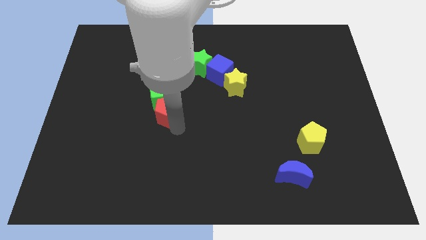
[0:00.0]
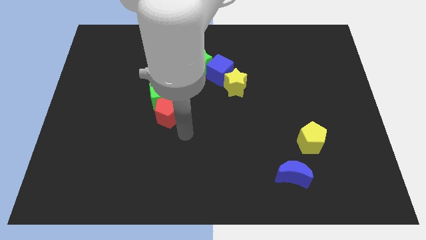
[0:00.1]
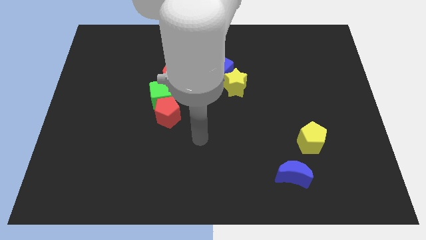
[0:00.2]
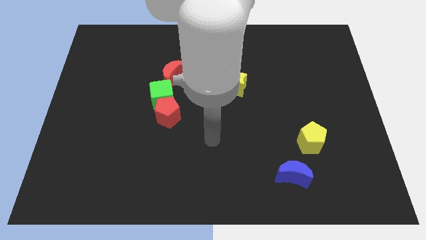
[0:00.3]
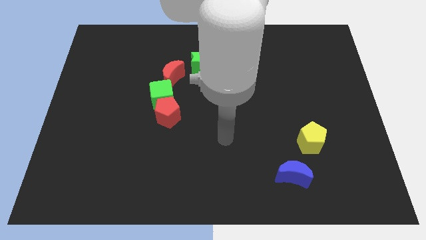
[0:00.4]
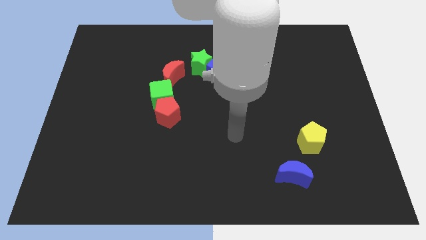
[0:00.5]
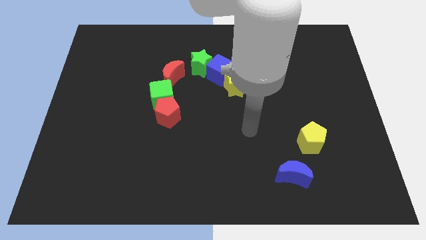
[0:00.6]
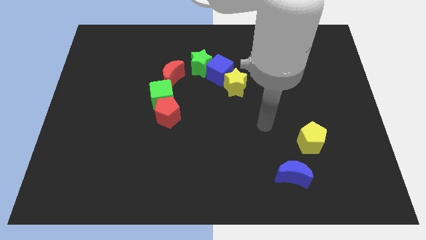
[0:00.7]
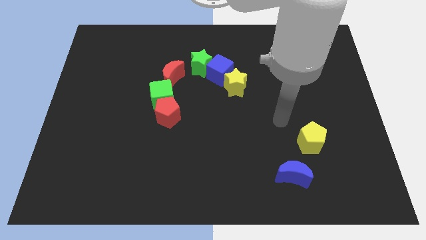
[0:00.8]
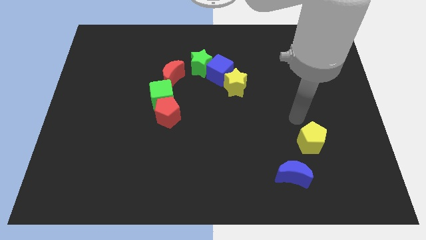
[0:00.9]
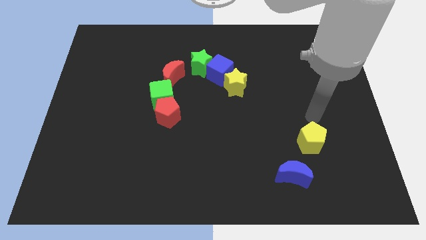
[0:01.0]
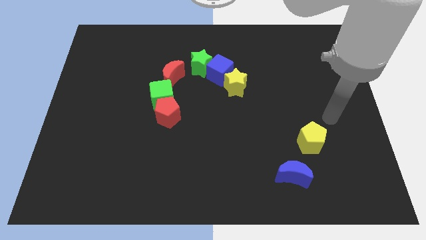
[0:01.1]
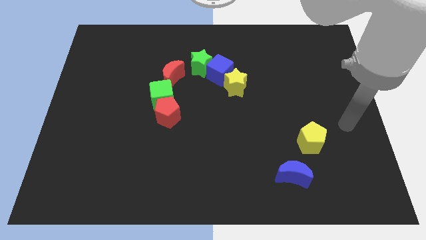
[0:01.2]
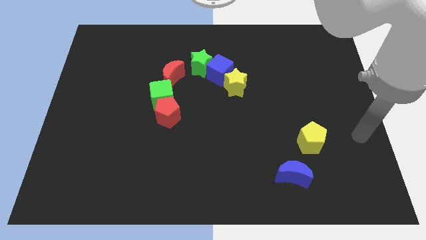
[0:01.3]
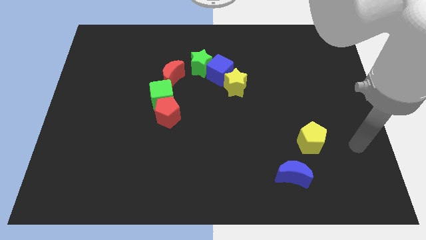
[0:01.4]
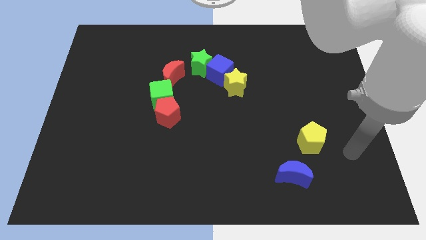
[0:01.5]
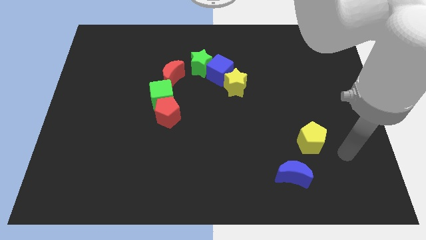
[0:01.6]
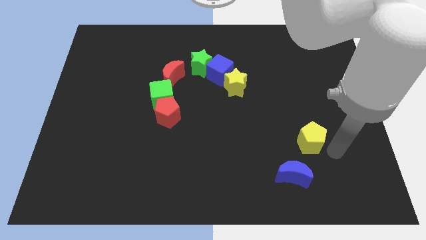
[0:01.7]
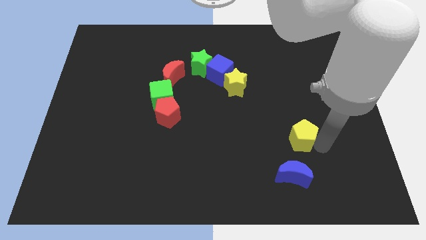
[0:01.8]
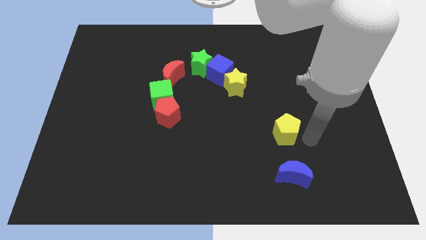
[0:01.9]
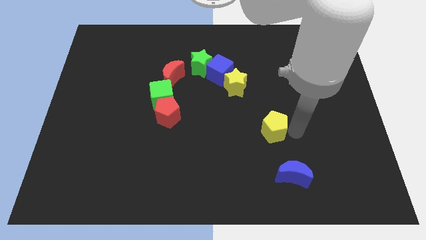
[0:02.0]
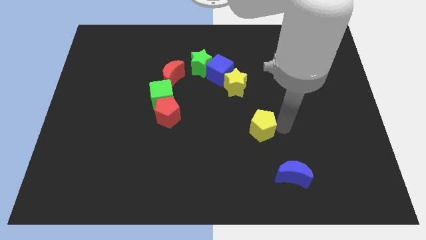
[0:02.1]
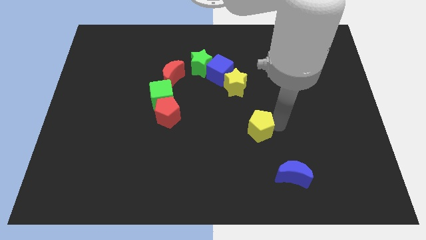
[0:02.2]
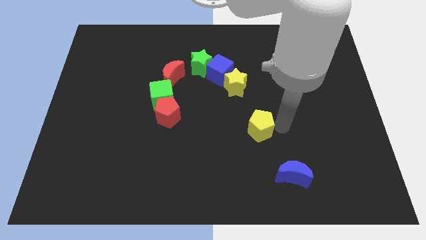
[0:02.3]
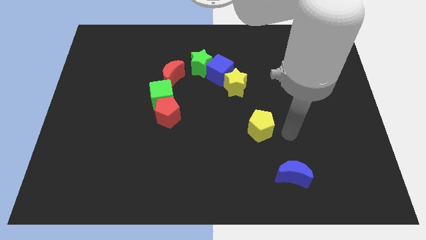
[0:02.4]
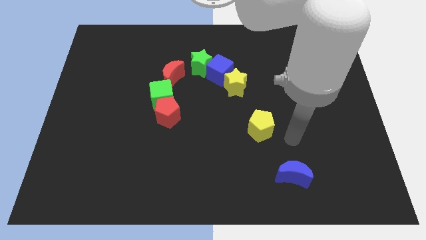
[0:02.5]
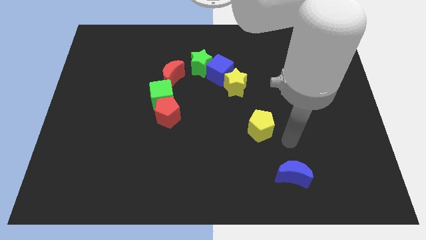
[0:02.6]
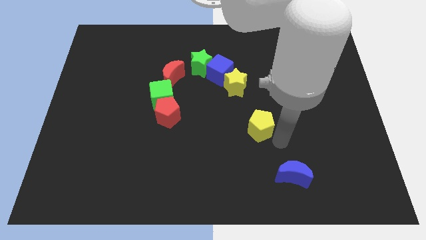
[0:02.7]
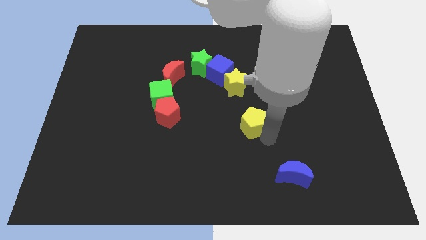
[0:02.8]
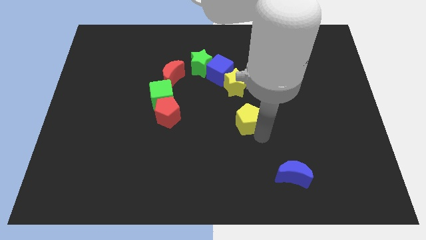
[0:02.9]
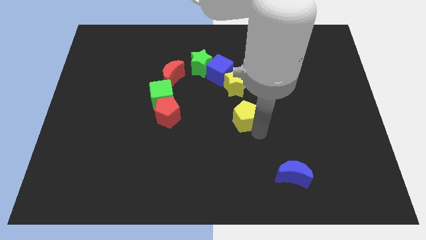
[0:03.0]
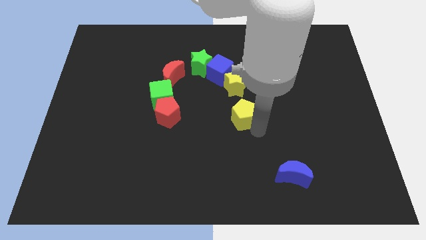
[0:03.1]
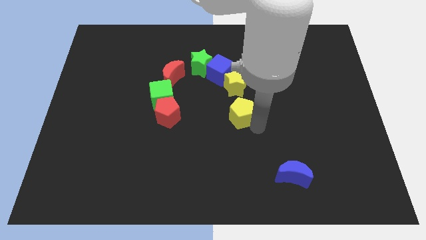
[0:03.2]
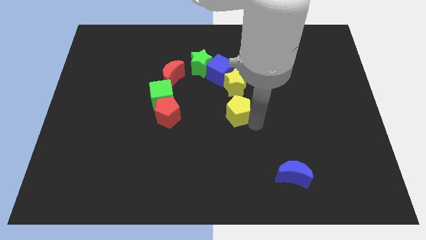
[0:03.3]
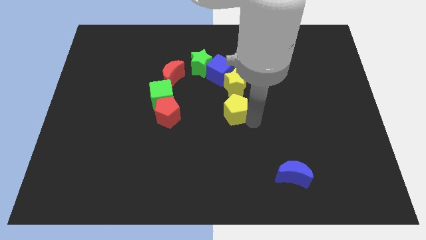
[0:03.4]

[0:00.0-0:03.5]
move the yellow pentagon to the bottom of the yellow star

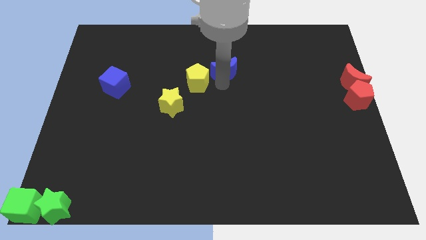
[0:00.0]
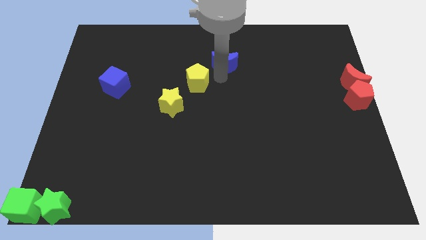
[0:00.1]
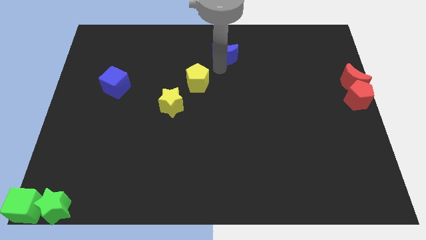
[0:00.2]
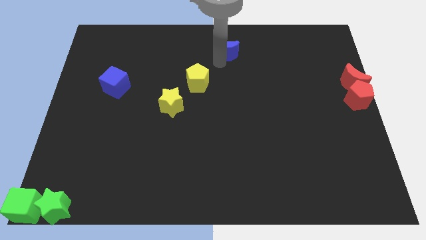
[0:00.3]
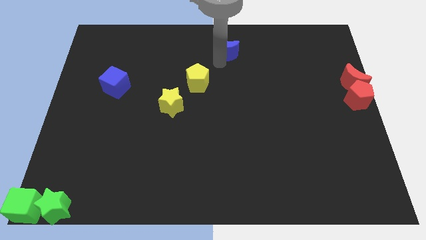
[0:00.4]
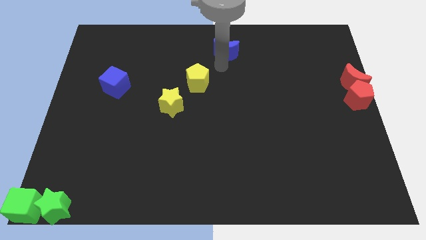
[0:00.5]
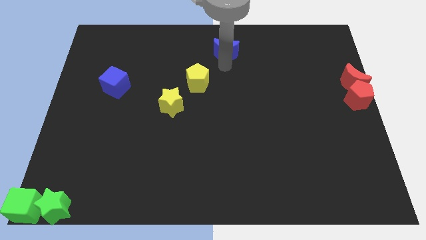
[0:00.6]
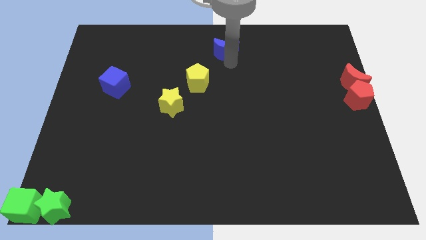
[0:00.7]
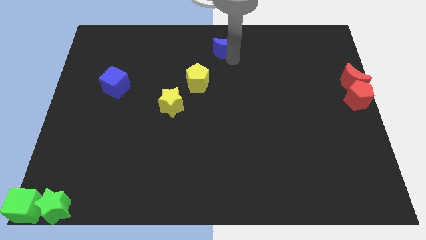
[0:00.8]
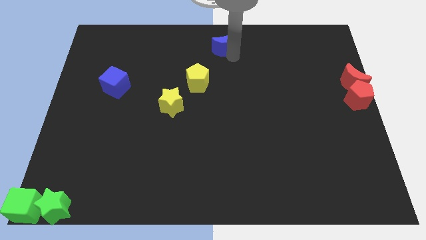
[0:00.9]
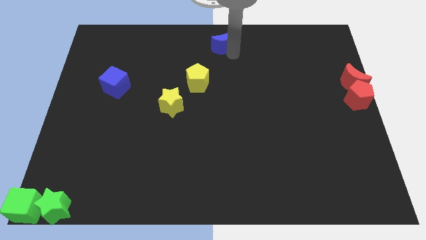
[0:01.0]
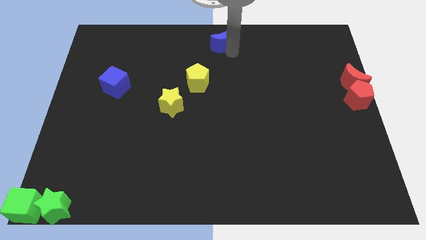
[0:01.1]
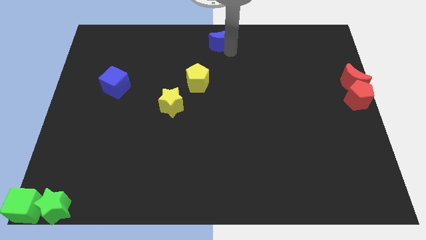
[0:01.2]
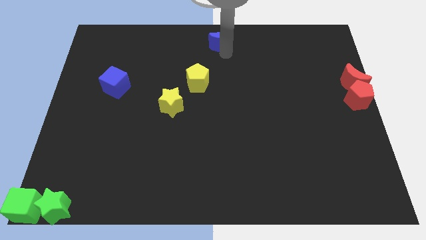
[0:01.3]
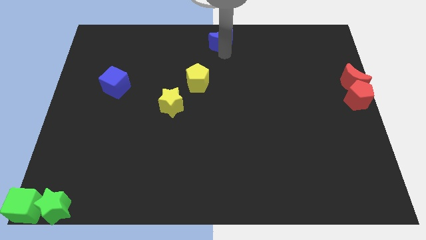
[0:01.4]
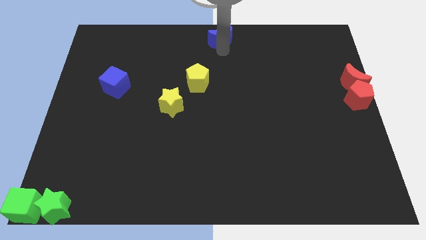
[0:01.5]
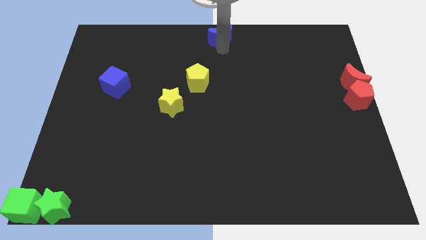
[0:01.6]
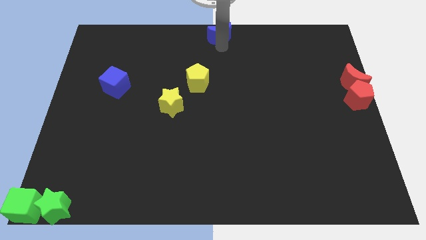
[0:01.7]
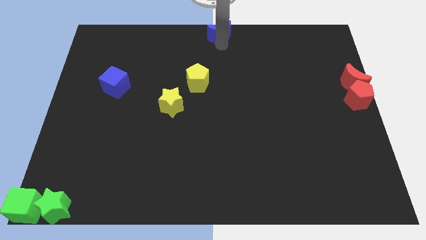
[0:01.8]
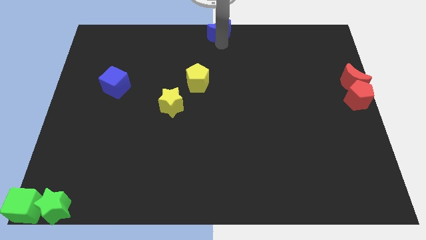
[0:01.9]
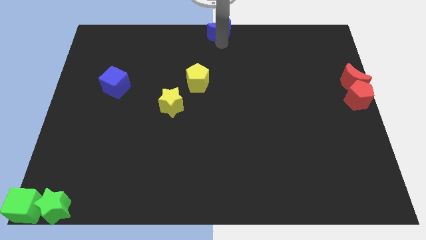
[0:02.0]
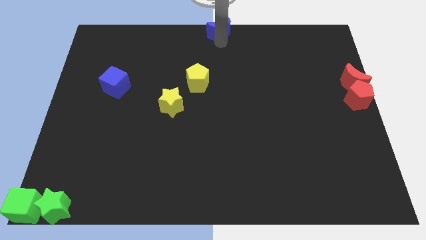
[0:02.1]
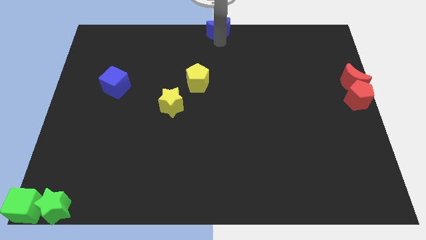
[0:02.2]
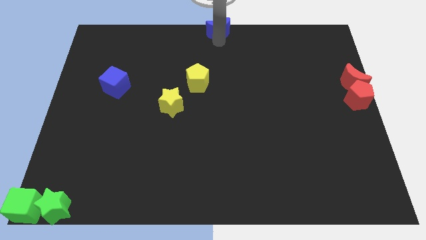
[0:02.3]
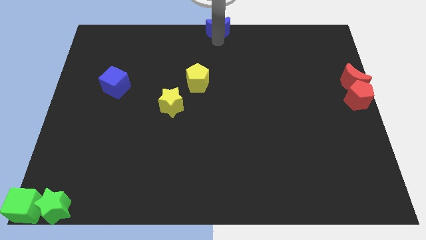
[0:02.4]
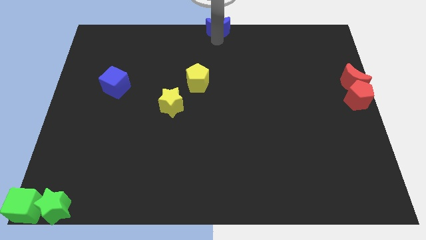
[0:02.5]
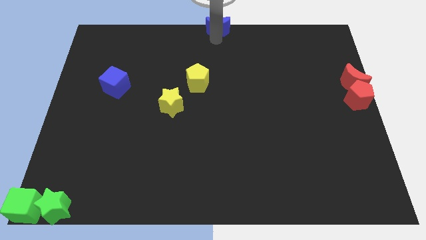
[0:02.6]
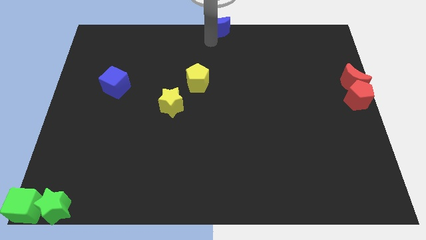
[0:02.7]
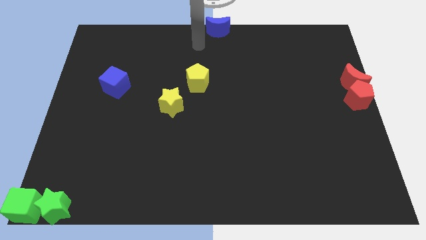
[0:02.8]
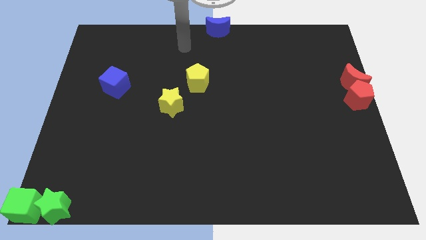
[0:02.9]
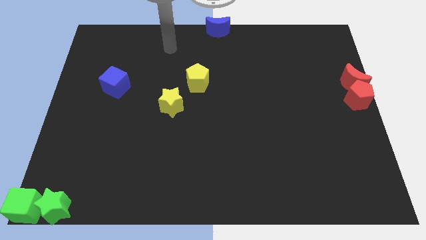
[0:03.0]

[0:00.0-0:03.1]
put the blue crescent at the top center of the table

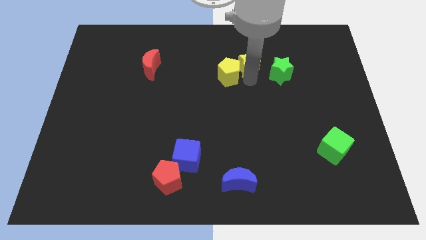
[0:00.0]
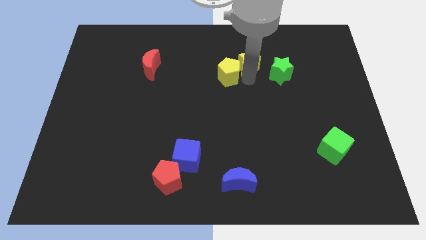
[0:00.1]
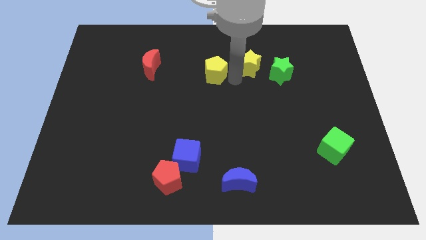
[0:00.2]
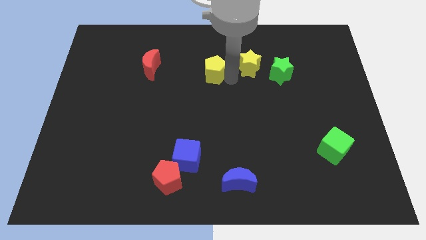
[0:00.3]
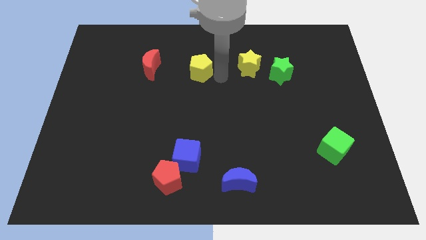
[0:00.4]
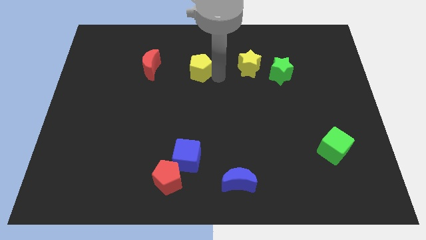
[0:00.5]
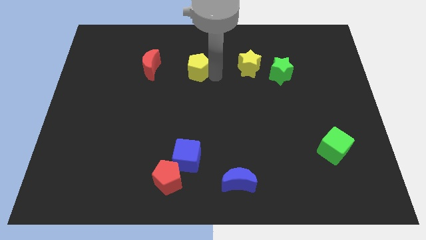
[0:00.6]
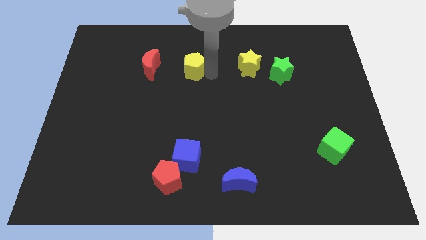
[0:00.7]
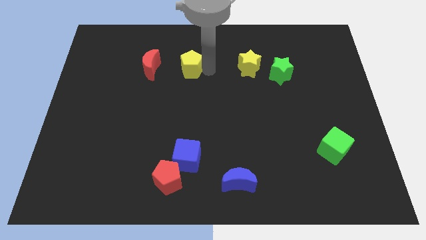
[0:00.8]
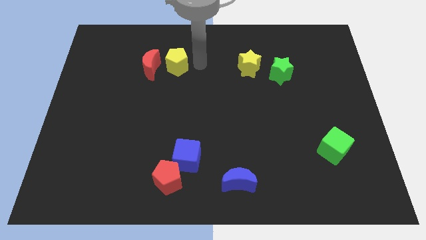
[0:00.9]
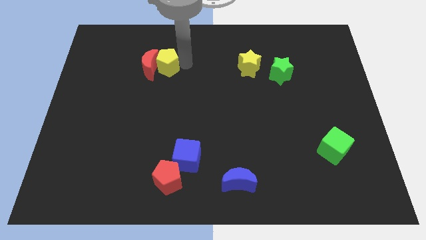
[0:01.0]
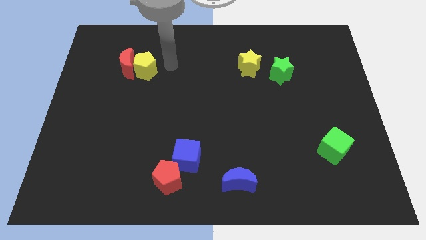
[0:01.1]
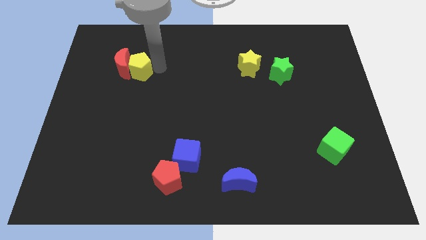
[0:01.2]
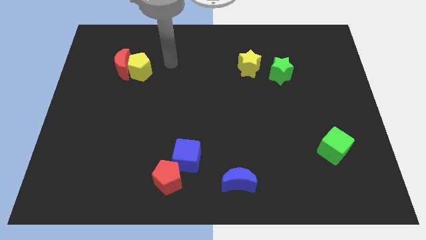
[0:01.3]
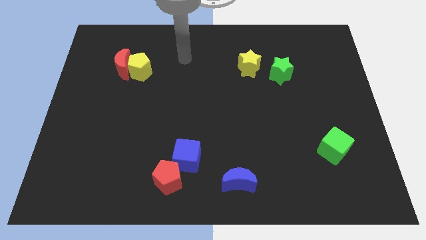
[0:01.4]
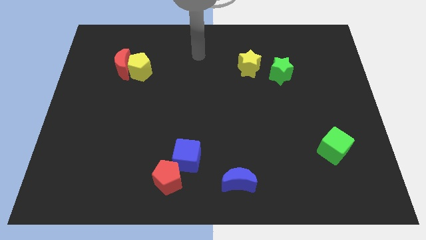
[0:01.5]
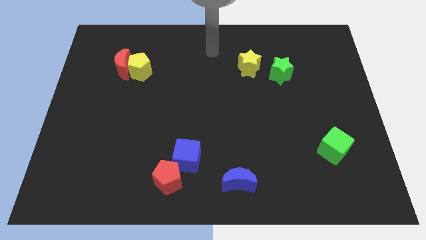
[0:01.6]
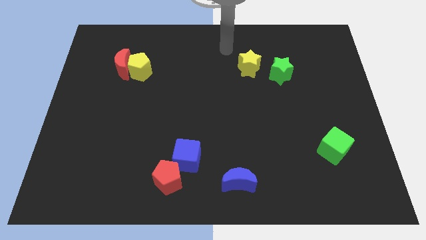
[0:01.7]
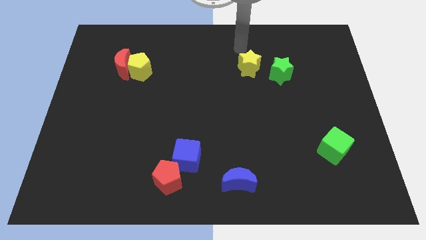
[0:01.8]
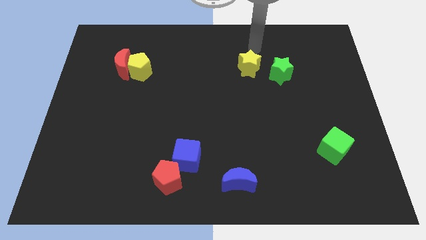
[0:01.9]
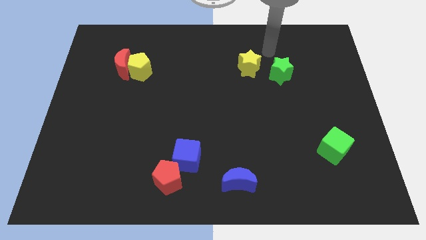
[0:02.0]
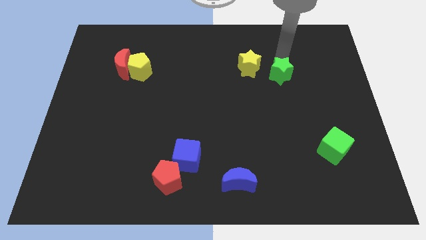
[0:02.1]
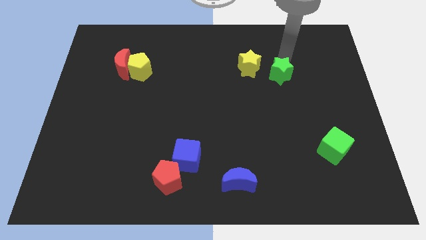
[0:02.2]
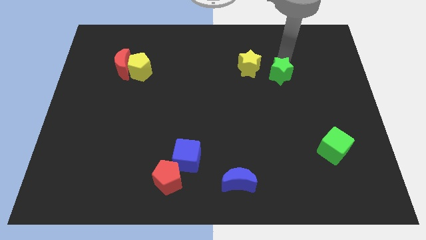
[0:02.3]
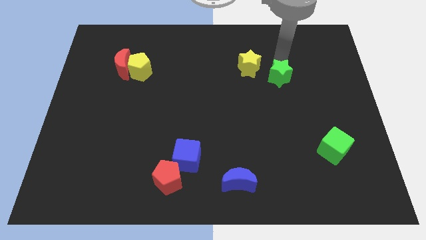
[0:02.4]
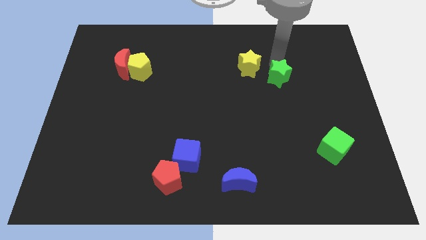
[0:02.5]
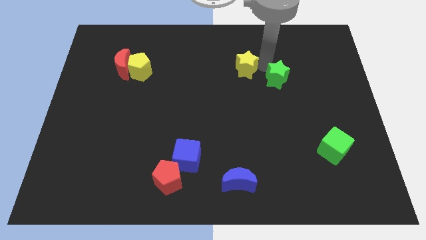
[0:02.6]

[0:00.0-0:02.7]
push the yellow pentagon into red moon
